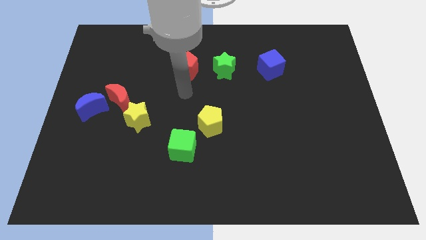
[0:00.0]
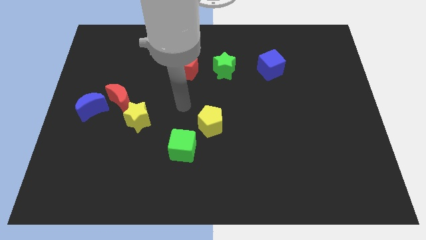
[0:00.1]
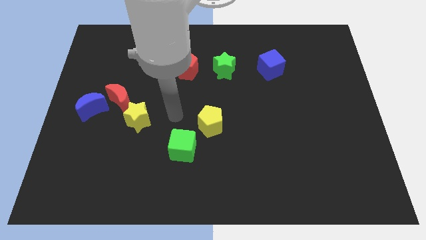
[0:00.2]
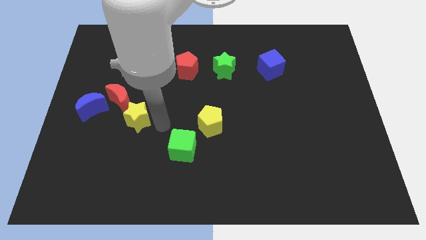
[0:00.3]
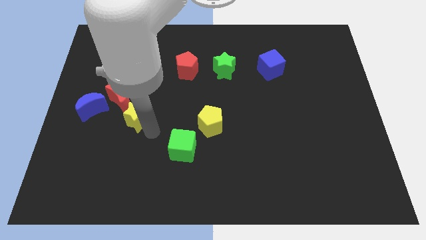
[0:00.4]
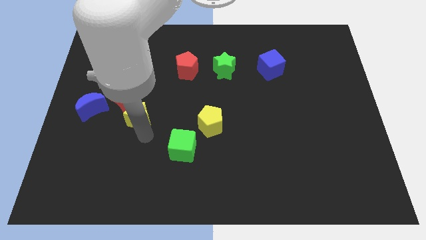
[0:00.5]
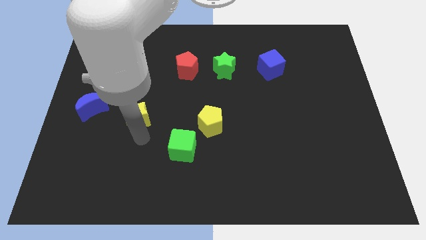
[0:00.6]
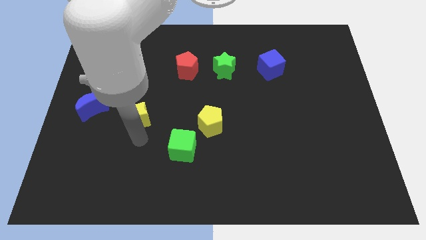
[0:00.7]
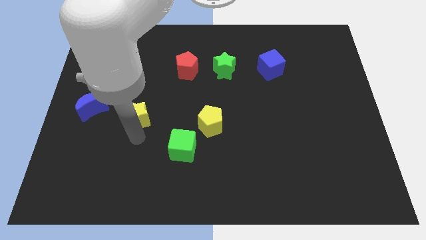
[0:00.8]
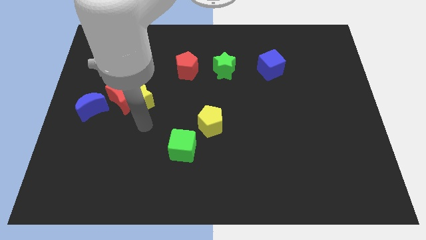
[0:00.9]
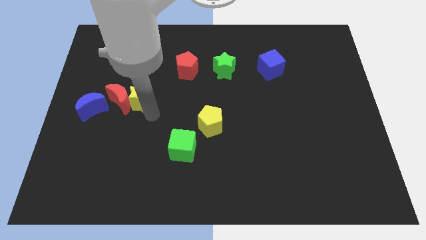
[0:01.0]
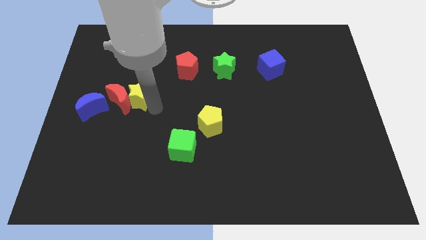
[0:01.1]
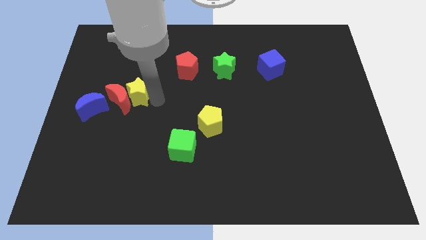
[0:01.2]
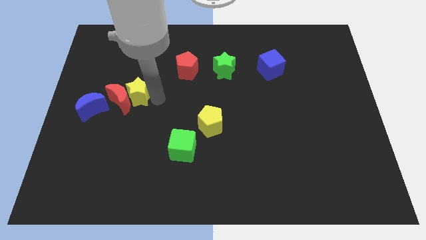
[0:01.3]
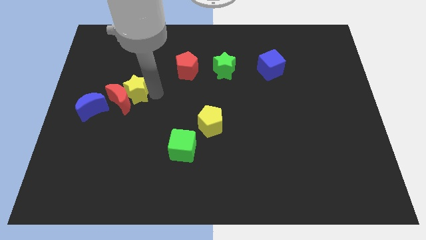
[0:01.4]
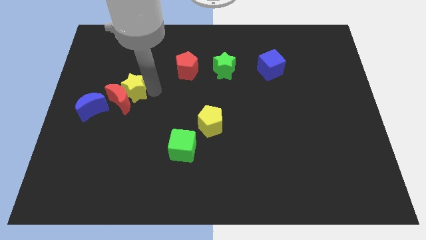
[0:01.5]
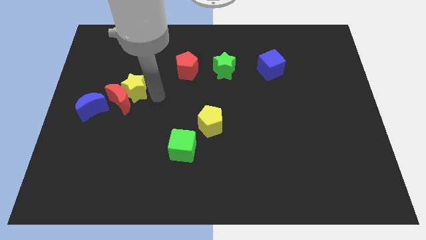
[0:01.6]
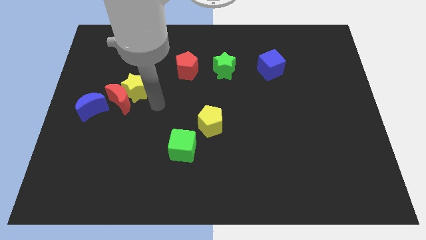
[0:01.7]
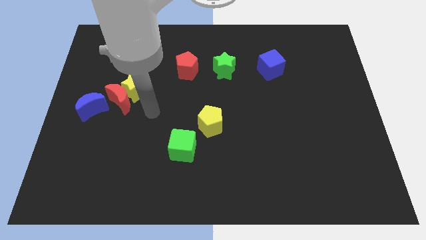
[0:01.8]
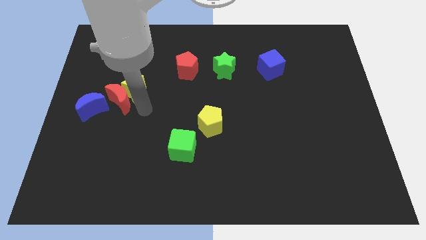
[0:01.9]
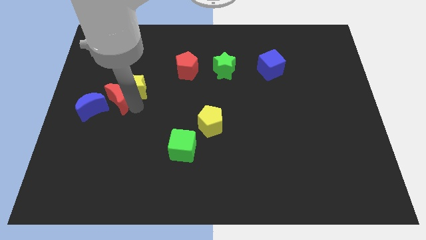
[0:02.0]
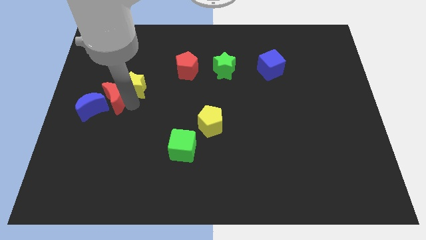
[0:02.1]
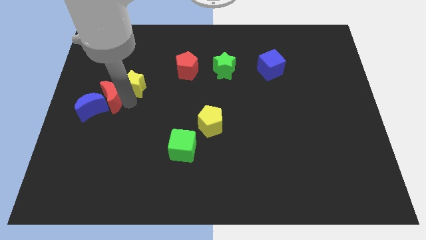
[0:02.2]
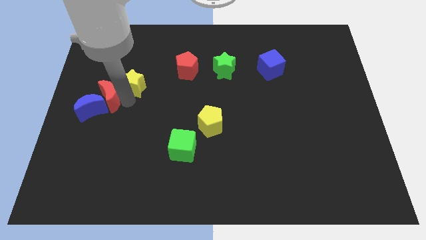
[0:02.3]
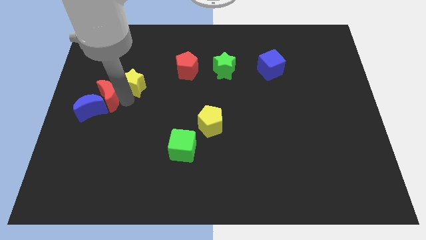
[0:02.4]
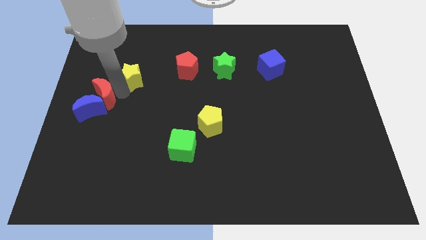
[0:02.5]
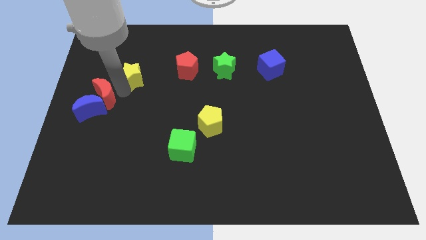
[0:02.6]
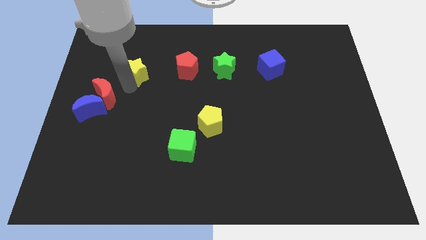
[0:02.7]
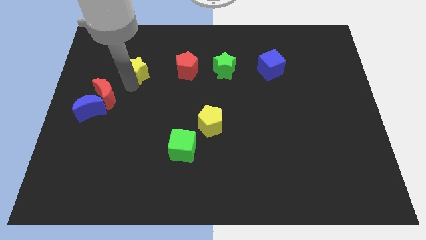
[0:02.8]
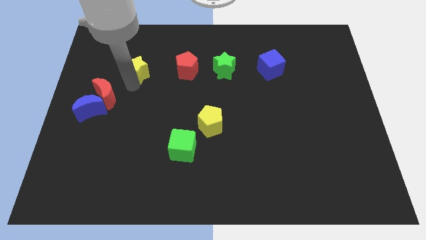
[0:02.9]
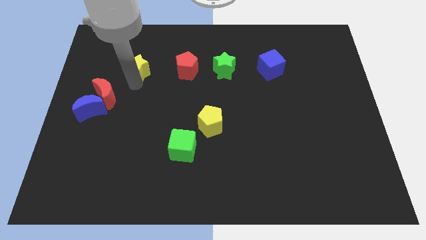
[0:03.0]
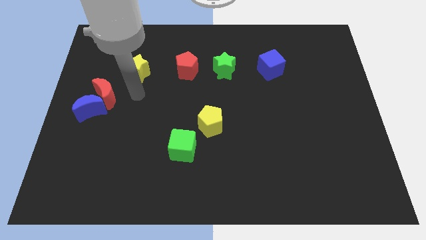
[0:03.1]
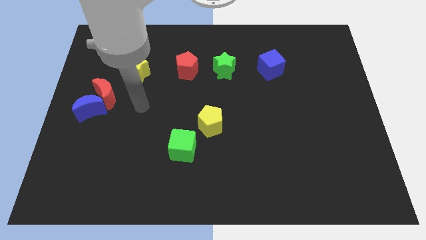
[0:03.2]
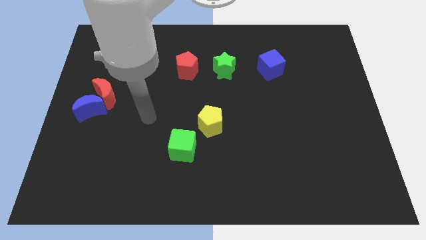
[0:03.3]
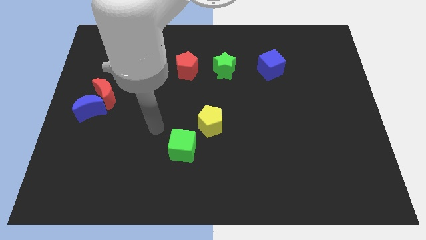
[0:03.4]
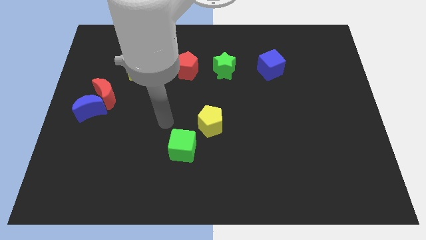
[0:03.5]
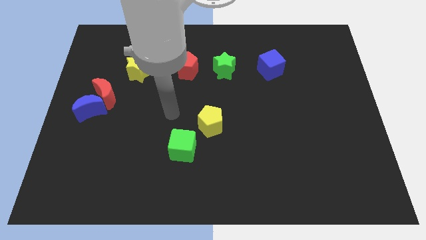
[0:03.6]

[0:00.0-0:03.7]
push the yellow star to the left of the red pentagon

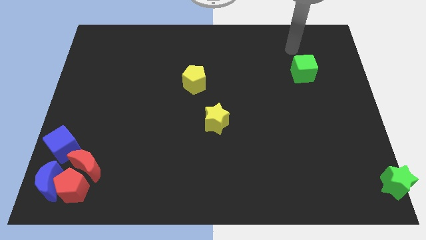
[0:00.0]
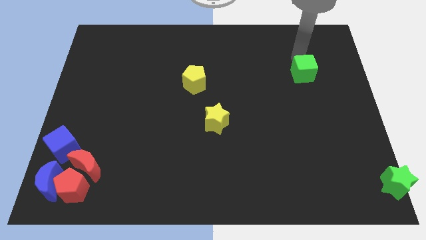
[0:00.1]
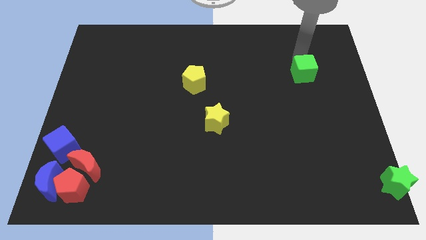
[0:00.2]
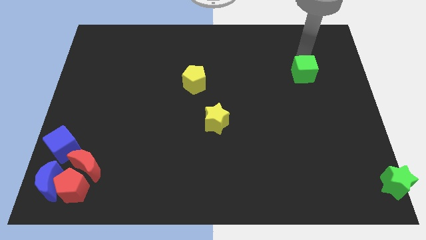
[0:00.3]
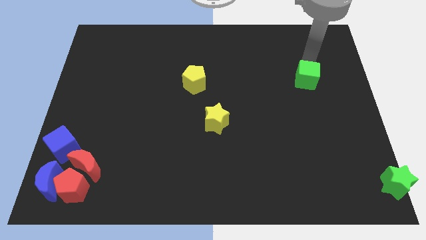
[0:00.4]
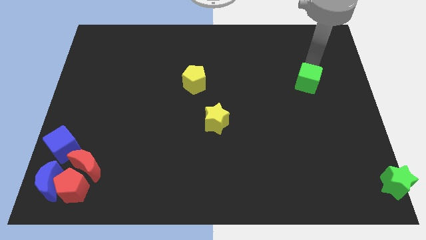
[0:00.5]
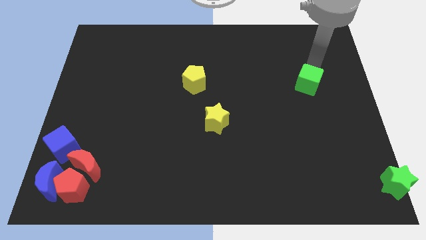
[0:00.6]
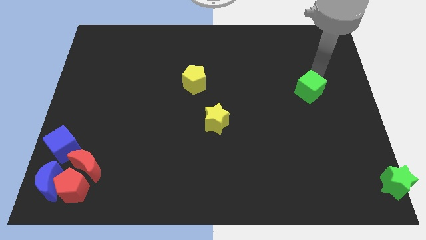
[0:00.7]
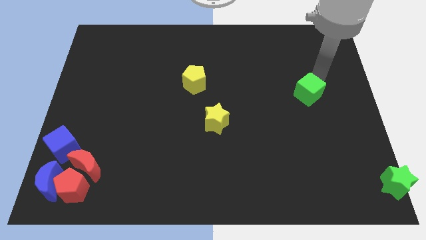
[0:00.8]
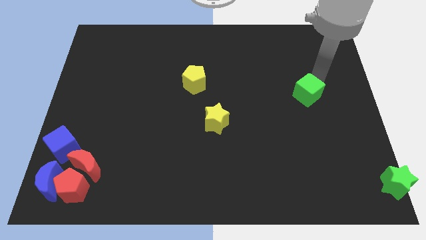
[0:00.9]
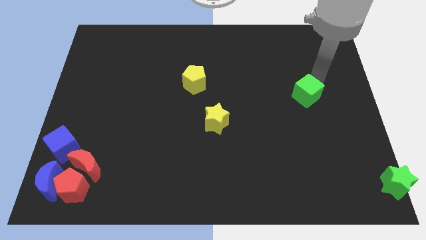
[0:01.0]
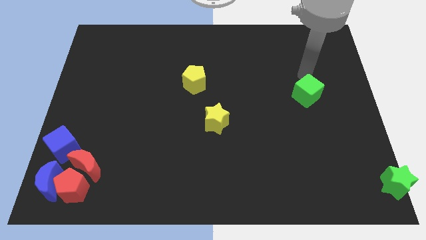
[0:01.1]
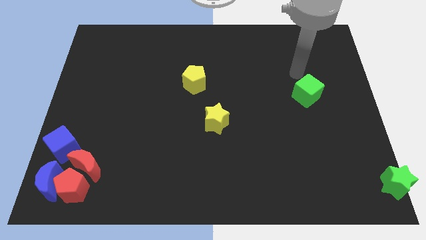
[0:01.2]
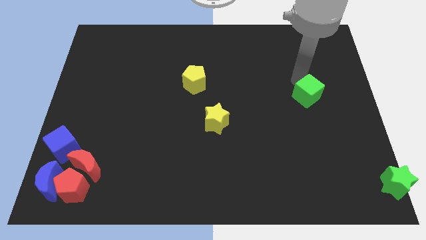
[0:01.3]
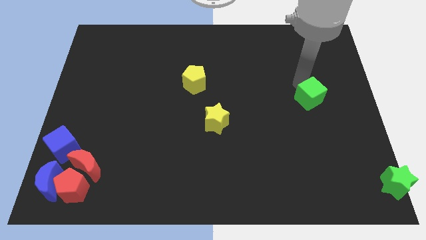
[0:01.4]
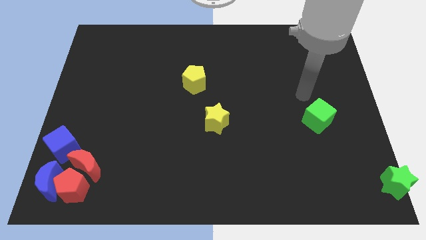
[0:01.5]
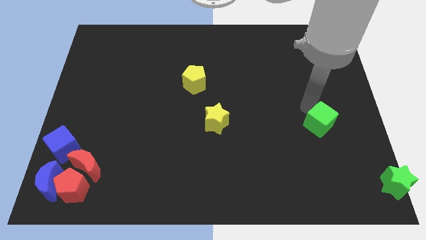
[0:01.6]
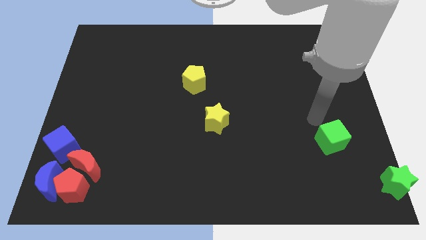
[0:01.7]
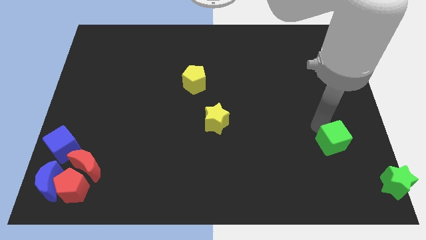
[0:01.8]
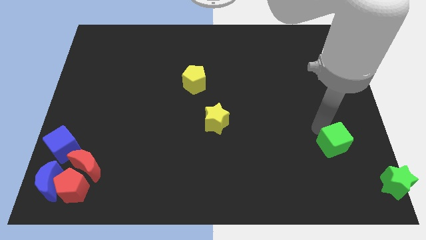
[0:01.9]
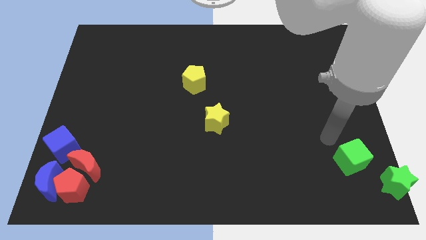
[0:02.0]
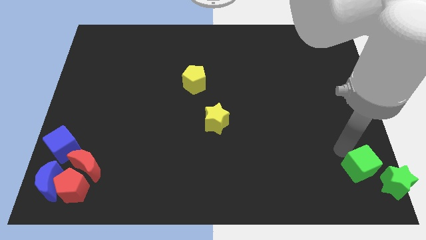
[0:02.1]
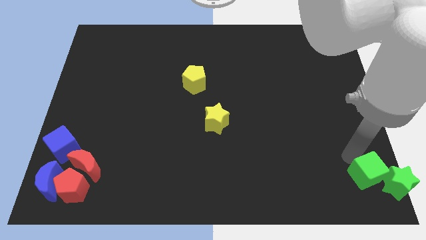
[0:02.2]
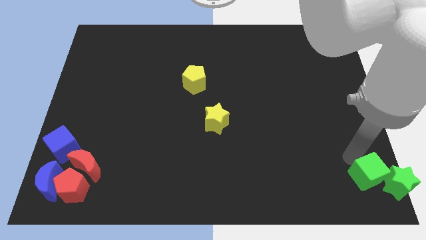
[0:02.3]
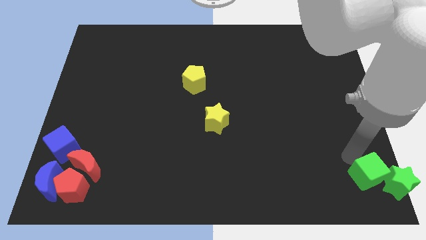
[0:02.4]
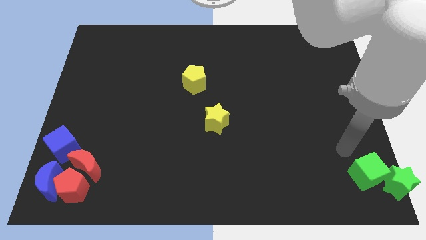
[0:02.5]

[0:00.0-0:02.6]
push green cube towards green star

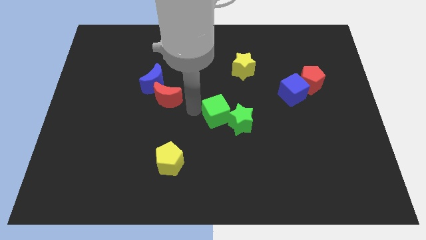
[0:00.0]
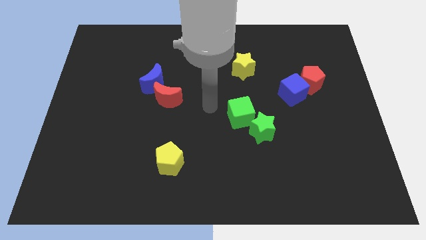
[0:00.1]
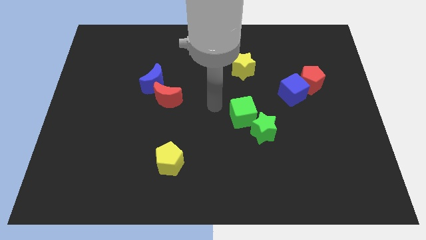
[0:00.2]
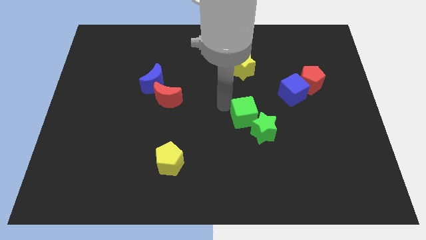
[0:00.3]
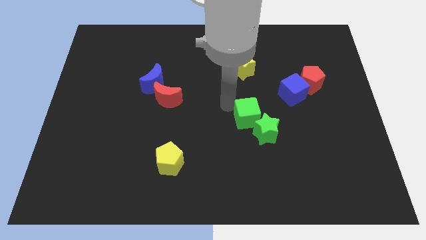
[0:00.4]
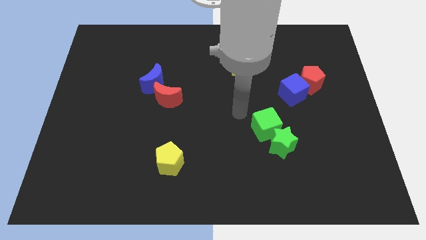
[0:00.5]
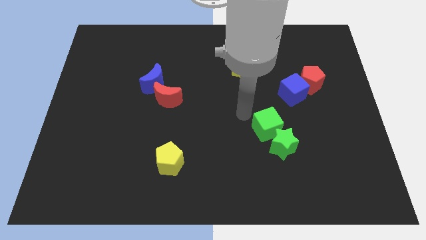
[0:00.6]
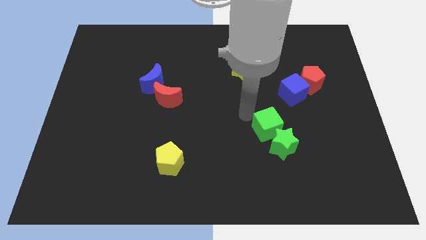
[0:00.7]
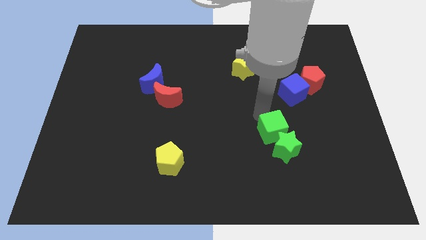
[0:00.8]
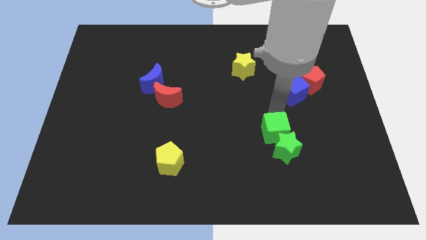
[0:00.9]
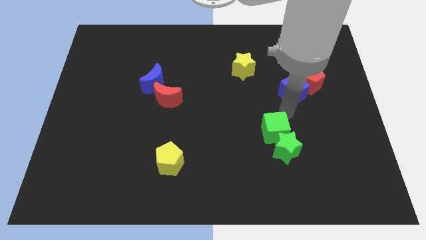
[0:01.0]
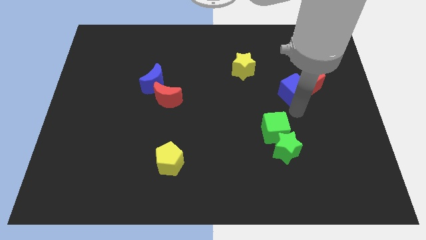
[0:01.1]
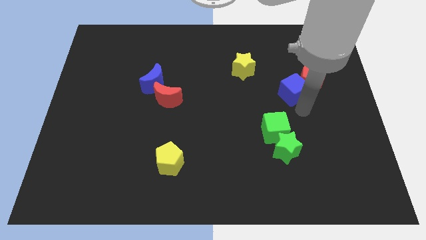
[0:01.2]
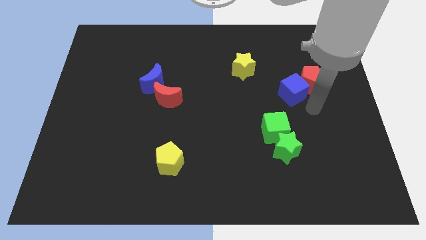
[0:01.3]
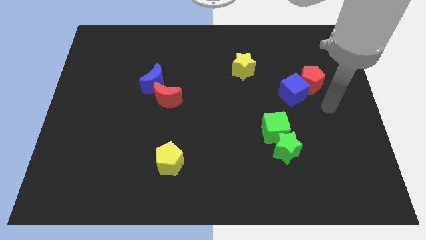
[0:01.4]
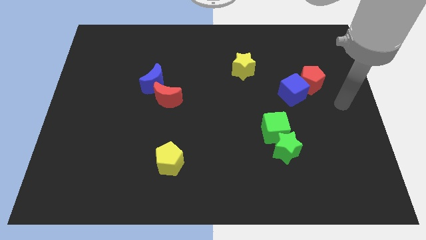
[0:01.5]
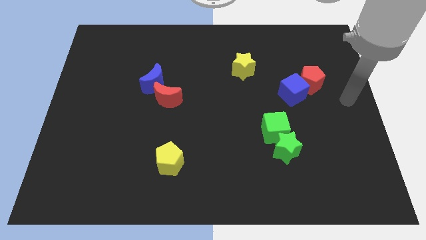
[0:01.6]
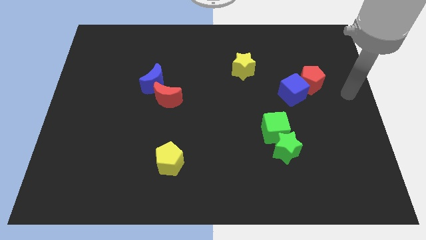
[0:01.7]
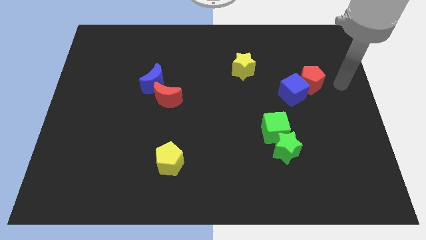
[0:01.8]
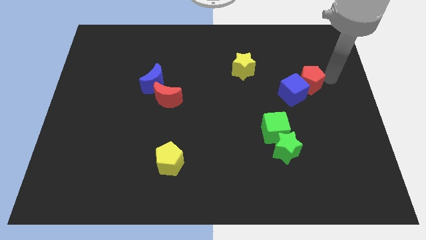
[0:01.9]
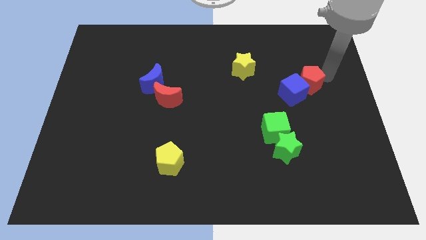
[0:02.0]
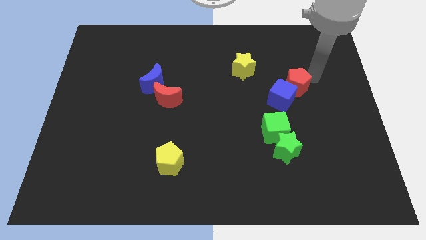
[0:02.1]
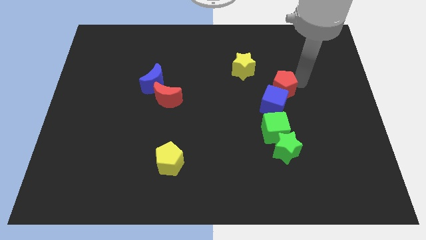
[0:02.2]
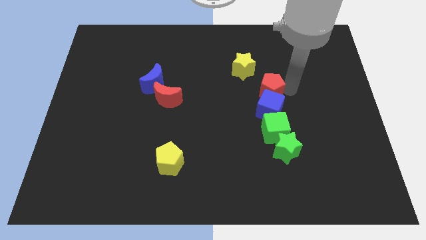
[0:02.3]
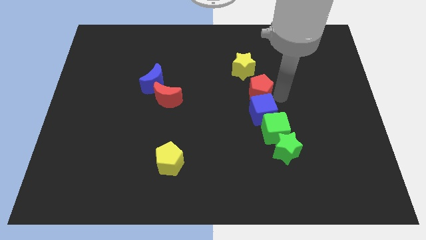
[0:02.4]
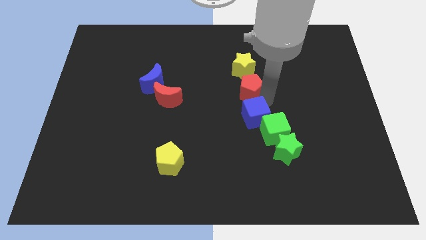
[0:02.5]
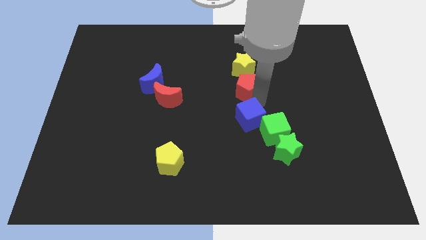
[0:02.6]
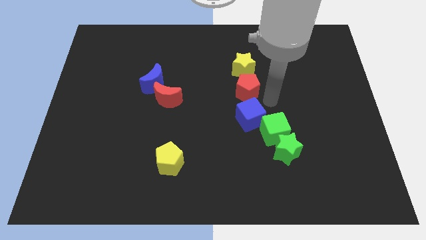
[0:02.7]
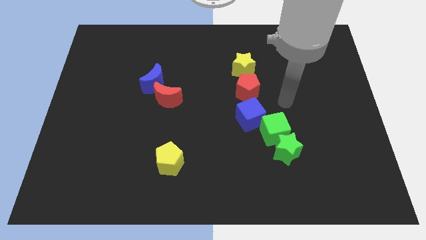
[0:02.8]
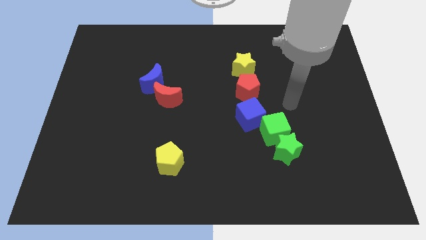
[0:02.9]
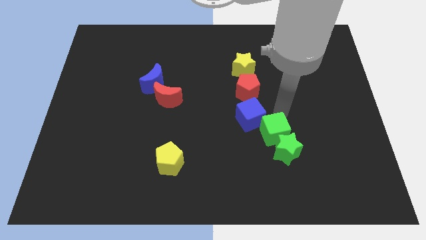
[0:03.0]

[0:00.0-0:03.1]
place red pentagon and the blue cube above the greeen blocks
